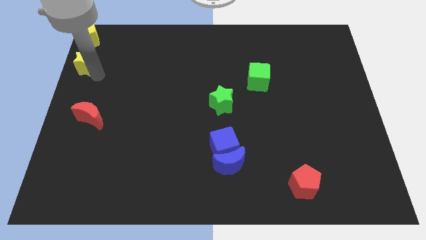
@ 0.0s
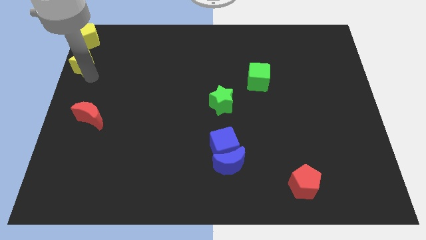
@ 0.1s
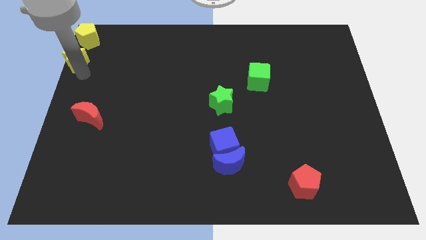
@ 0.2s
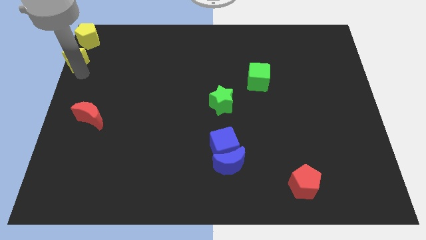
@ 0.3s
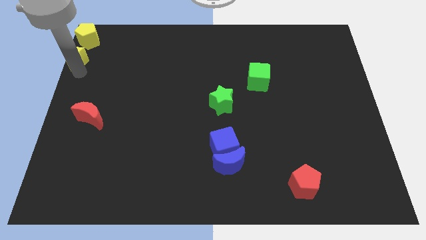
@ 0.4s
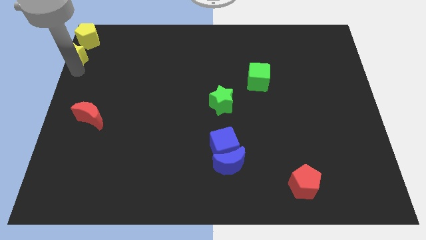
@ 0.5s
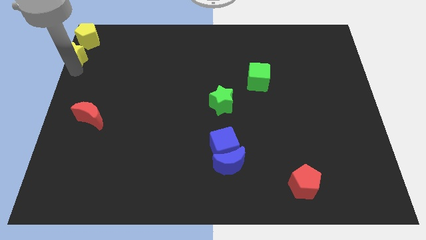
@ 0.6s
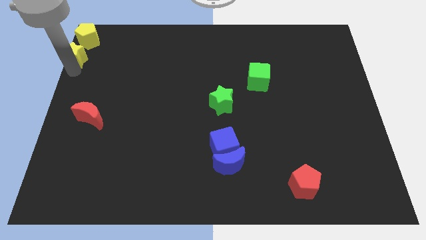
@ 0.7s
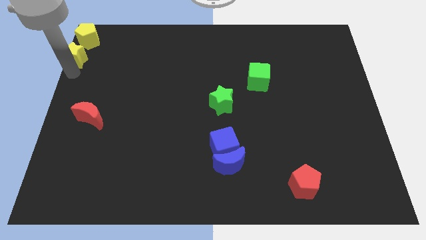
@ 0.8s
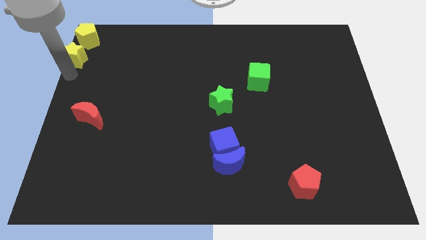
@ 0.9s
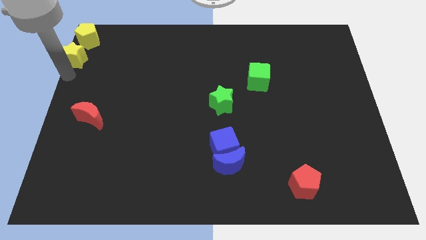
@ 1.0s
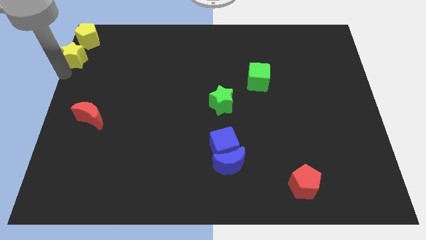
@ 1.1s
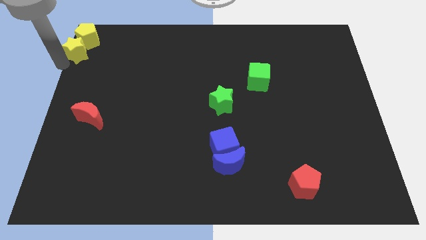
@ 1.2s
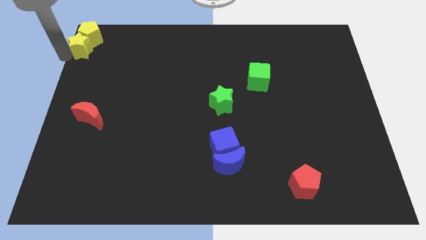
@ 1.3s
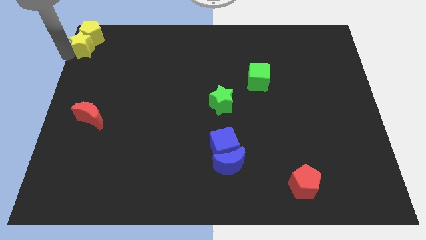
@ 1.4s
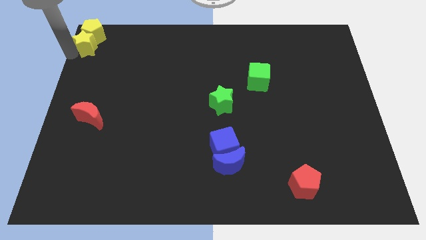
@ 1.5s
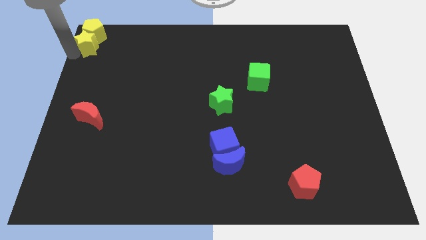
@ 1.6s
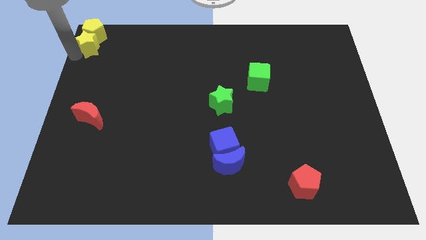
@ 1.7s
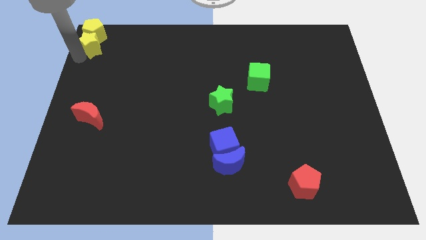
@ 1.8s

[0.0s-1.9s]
push the yellow star into the yellow pentagon

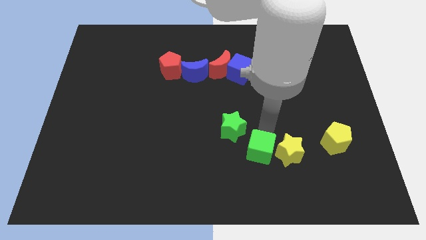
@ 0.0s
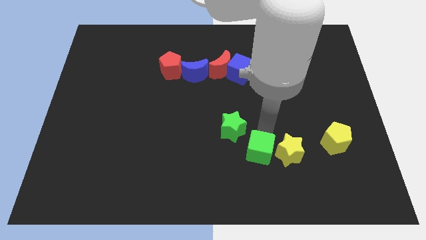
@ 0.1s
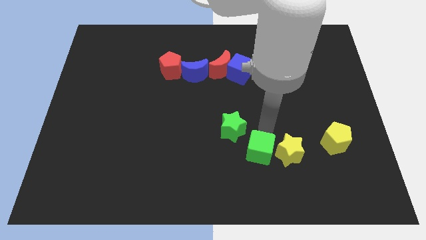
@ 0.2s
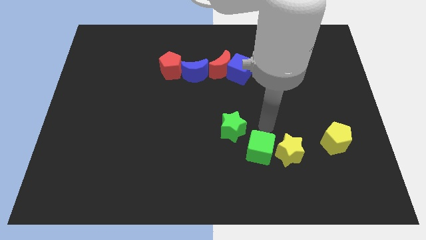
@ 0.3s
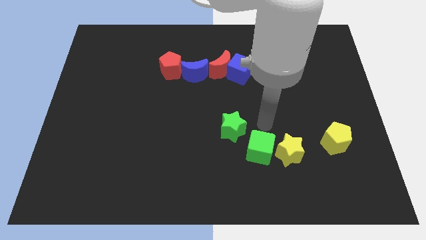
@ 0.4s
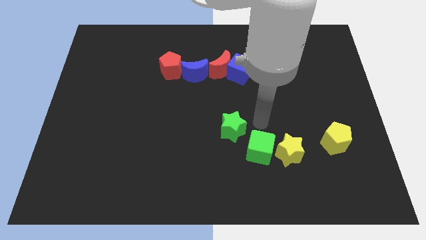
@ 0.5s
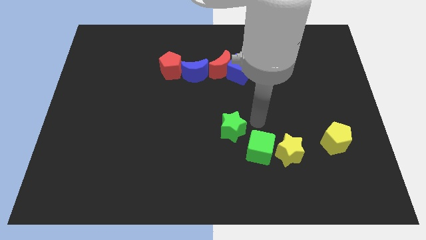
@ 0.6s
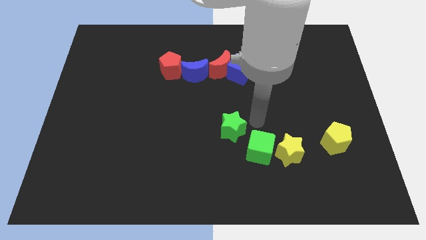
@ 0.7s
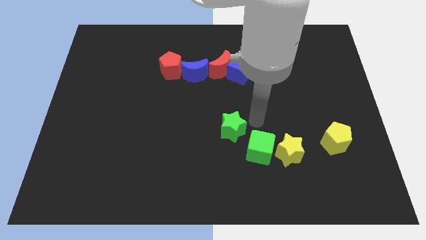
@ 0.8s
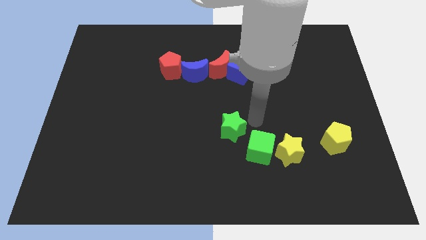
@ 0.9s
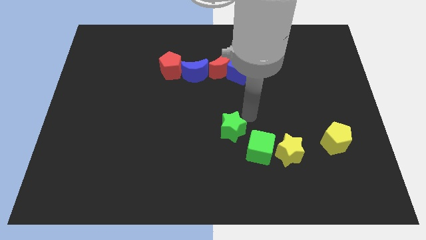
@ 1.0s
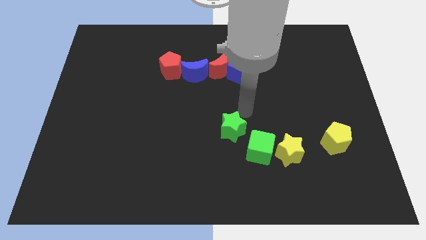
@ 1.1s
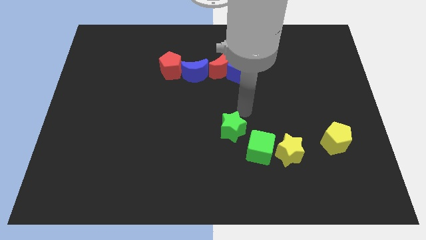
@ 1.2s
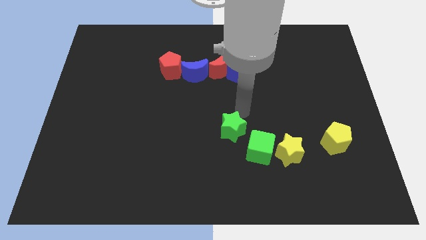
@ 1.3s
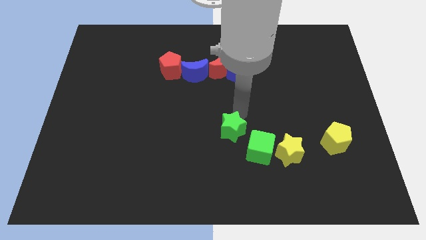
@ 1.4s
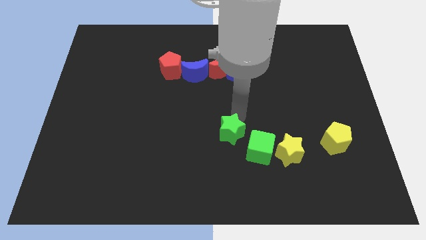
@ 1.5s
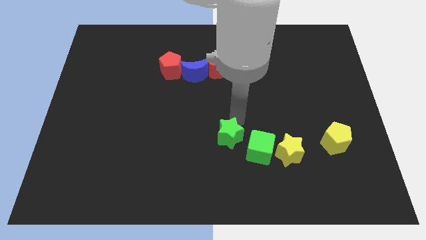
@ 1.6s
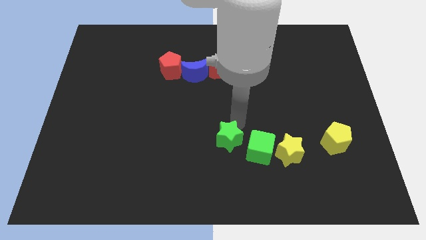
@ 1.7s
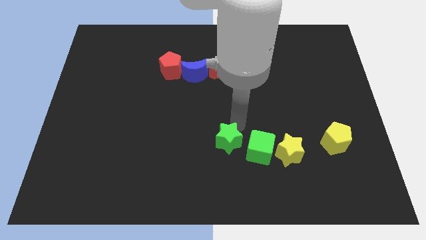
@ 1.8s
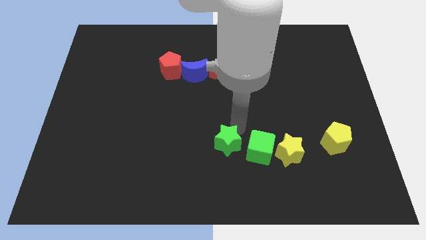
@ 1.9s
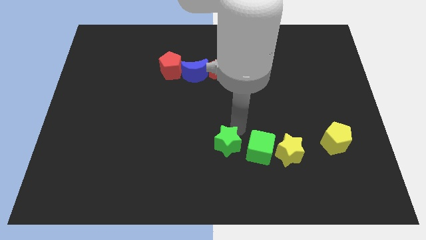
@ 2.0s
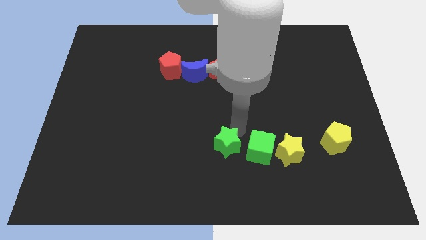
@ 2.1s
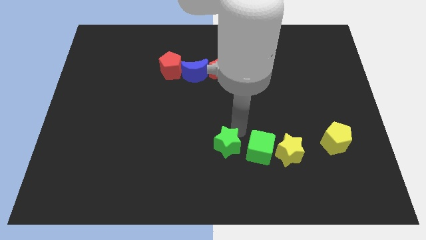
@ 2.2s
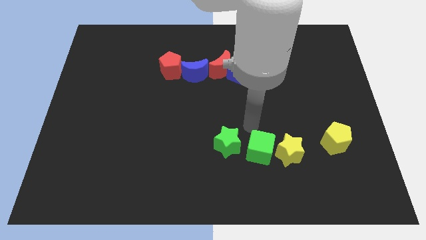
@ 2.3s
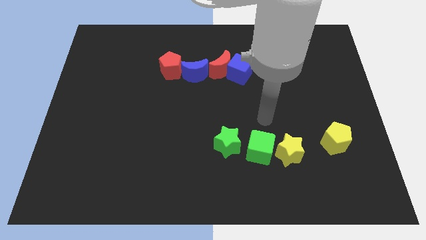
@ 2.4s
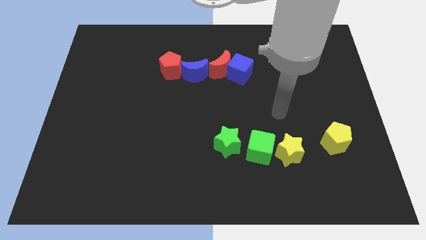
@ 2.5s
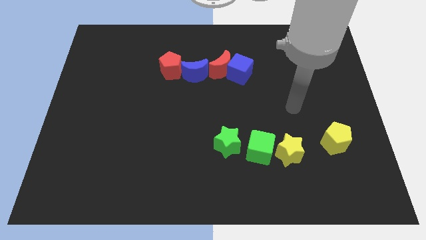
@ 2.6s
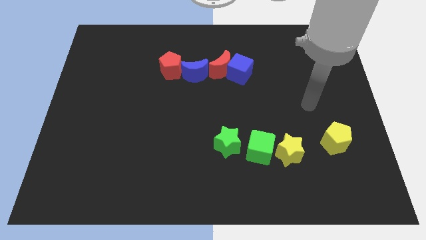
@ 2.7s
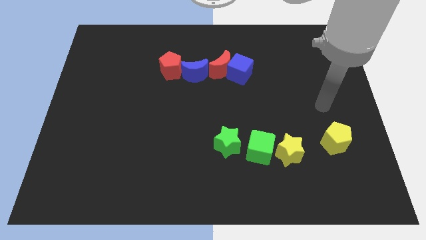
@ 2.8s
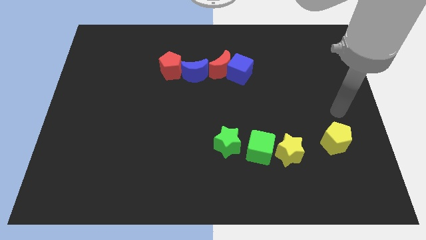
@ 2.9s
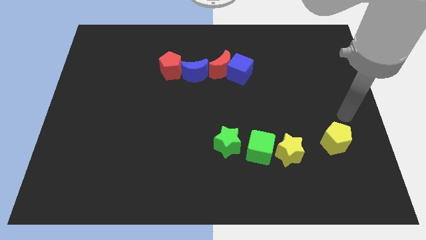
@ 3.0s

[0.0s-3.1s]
push green star to the left of green cube

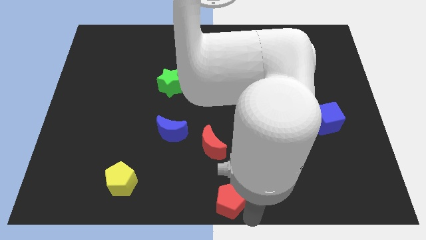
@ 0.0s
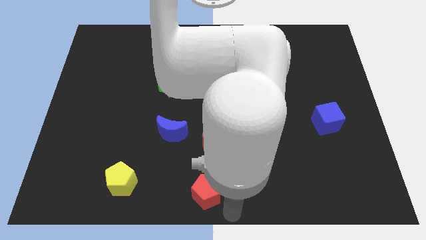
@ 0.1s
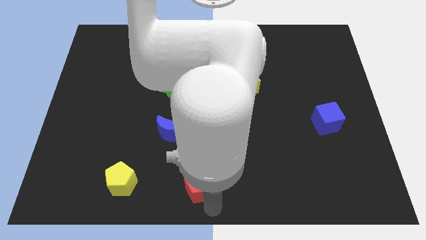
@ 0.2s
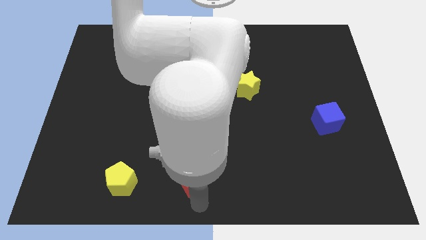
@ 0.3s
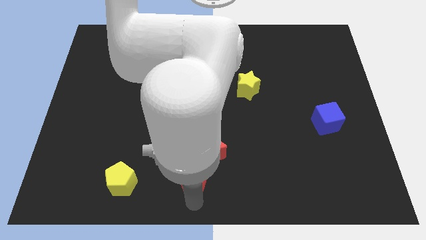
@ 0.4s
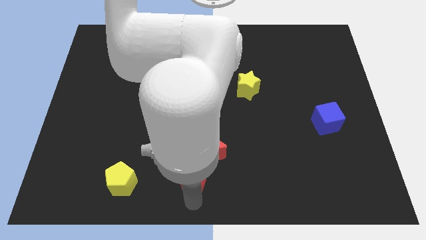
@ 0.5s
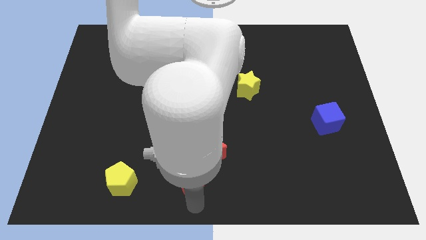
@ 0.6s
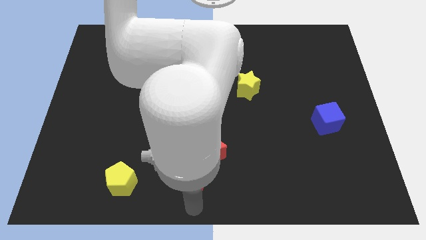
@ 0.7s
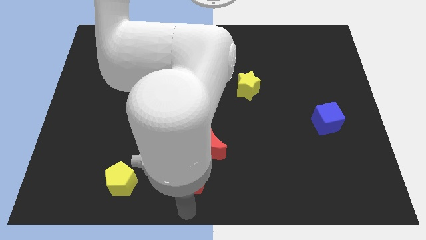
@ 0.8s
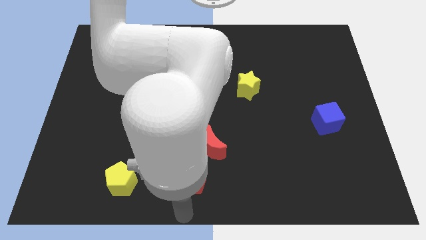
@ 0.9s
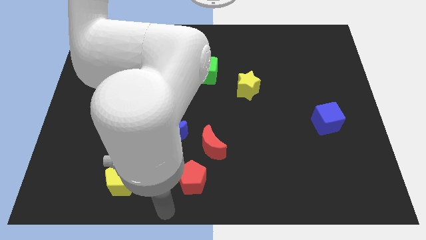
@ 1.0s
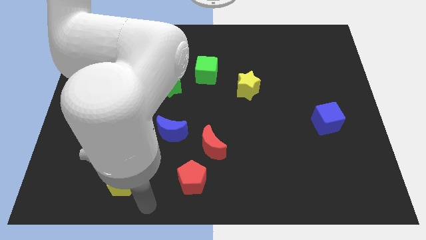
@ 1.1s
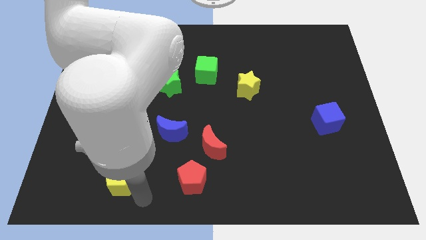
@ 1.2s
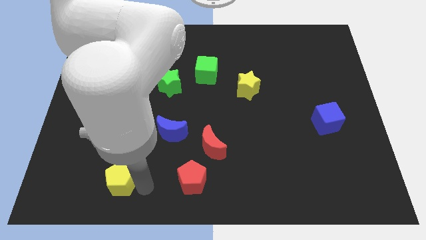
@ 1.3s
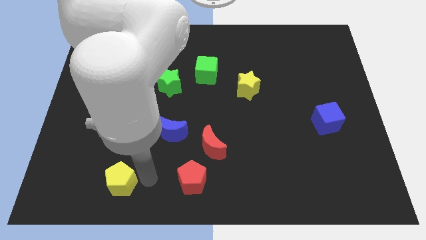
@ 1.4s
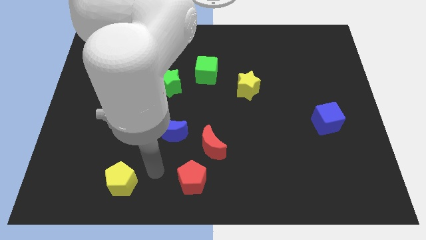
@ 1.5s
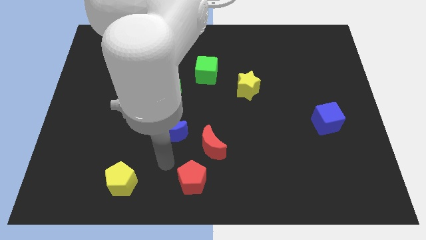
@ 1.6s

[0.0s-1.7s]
move the red pentagon to the right of the yellow pentagon

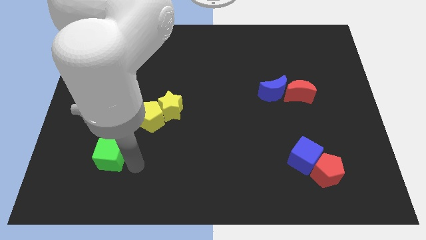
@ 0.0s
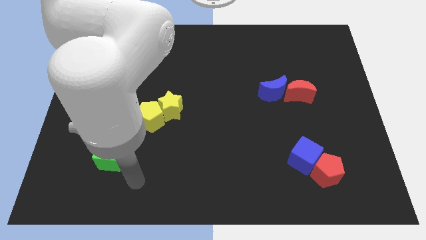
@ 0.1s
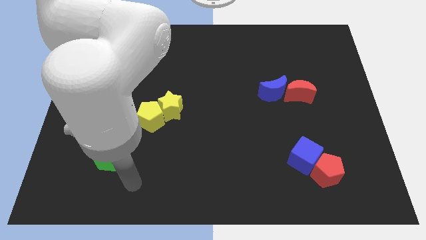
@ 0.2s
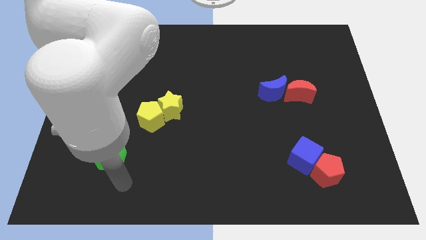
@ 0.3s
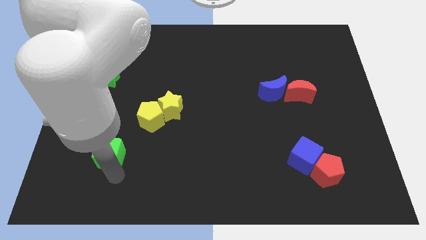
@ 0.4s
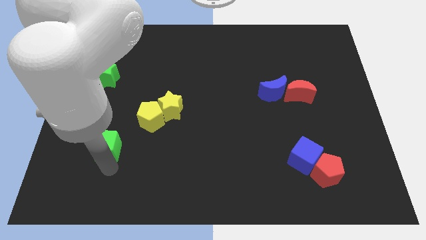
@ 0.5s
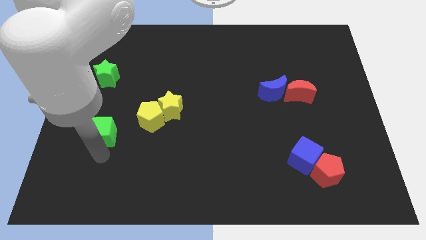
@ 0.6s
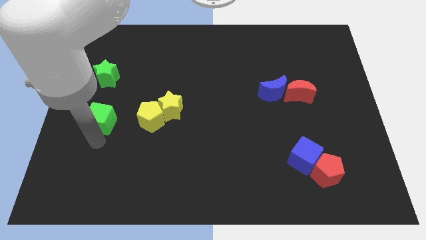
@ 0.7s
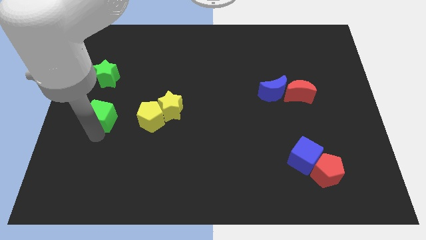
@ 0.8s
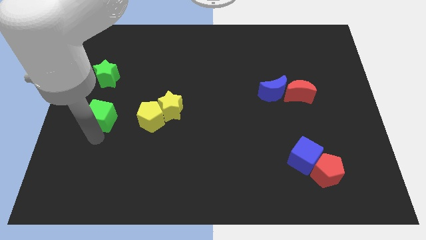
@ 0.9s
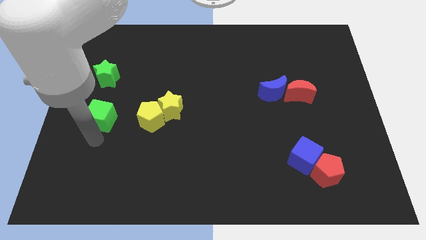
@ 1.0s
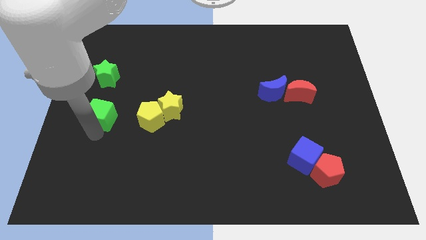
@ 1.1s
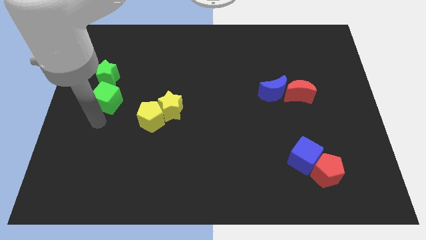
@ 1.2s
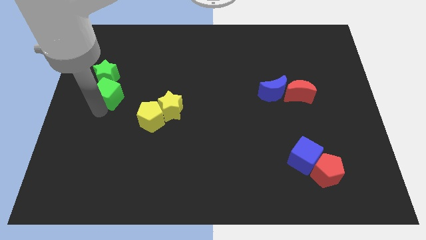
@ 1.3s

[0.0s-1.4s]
put the green cube at the bottom of green star

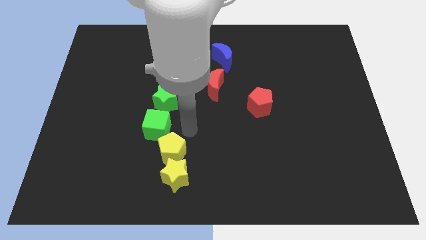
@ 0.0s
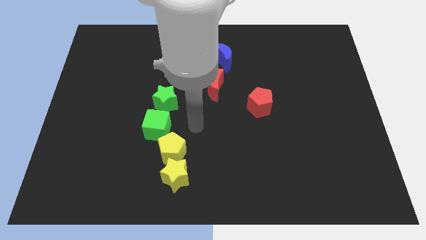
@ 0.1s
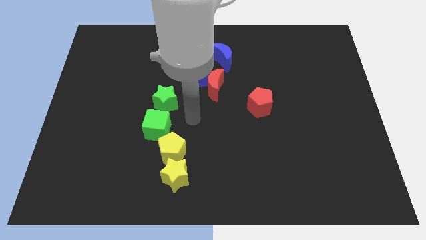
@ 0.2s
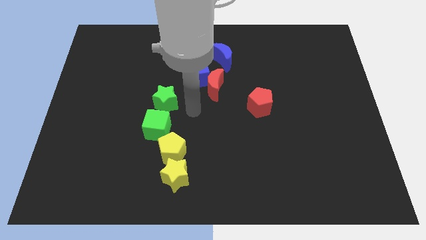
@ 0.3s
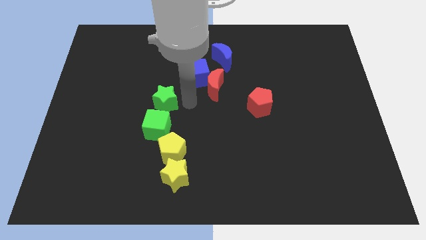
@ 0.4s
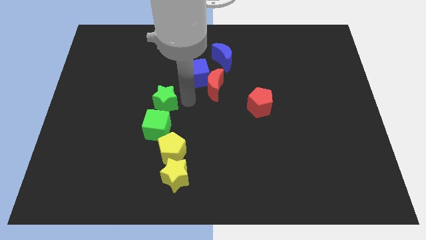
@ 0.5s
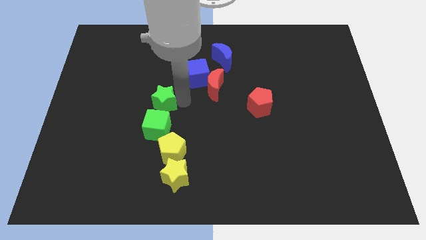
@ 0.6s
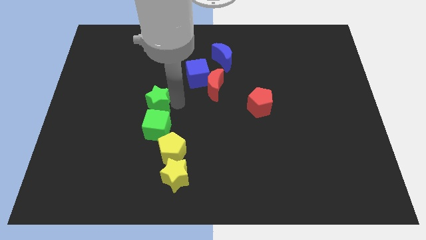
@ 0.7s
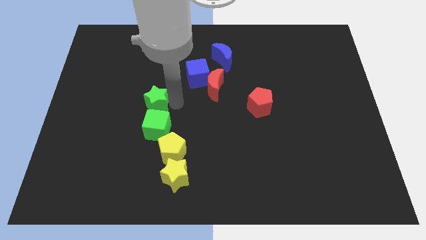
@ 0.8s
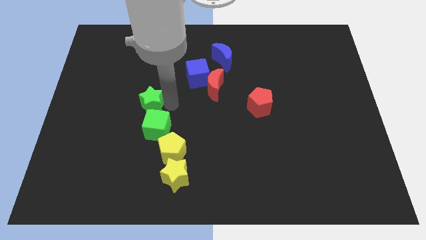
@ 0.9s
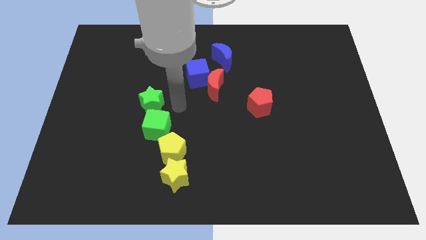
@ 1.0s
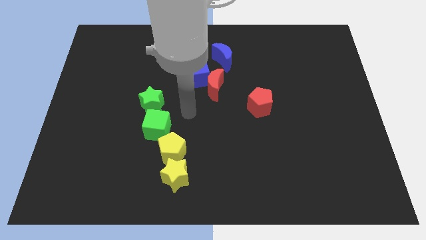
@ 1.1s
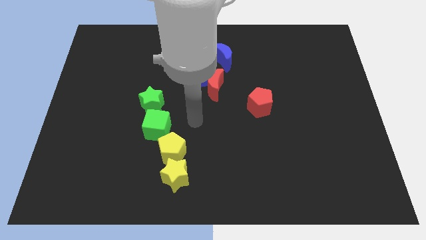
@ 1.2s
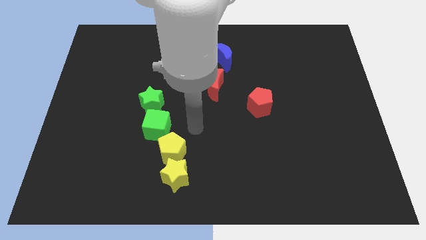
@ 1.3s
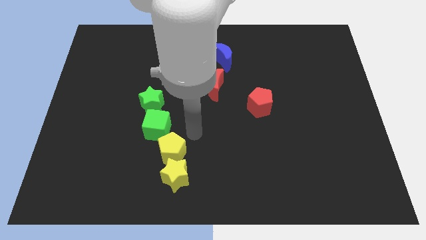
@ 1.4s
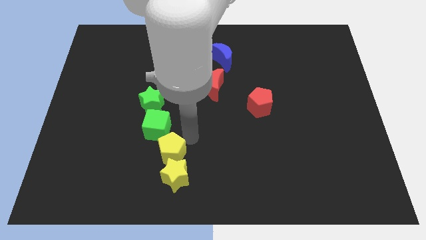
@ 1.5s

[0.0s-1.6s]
push green star a bit to its left
